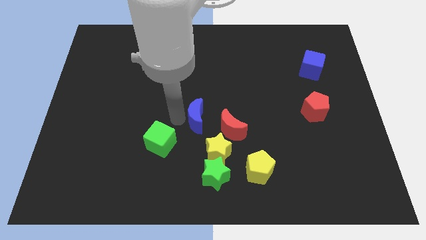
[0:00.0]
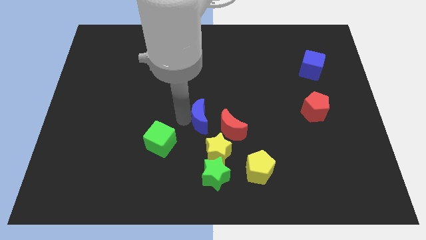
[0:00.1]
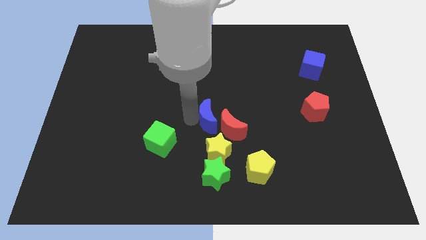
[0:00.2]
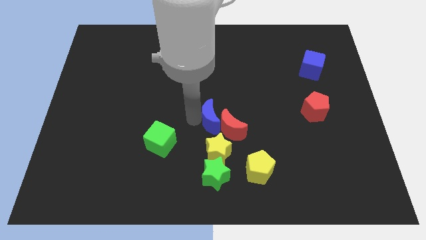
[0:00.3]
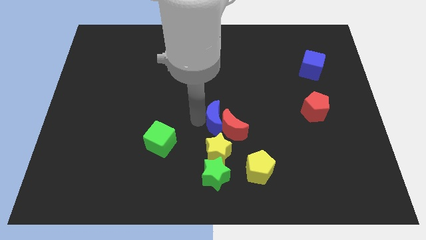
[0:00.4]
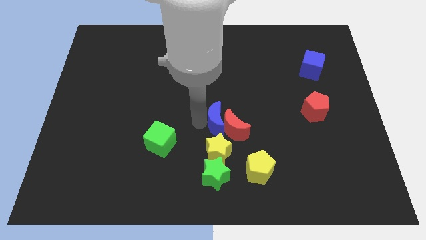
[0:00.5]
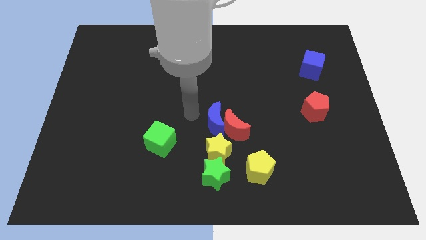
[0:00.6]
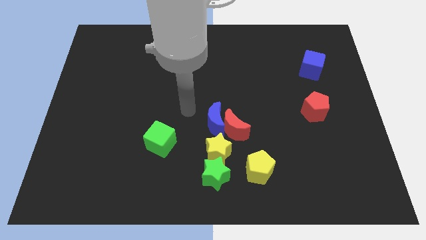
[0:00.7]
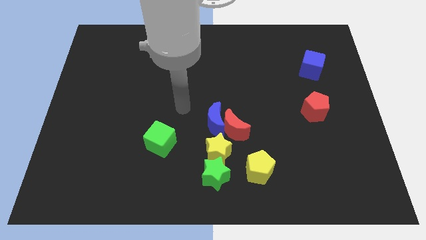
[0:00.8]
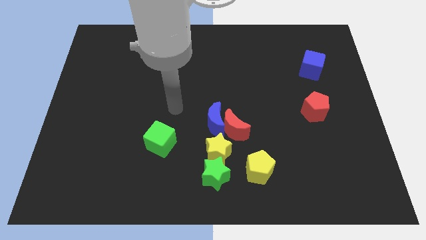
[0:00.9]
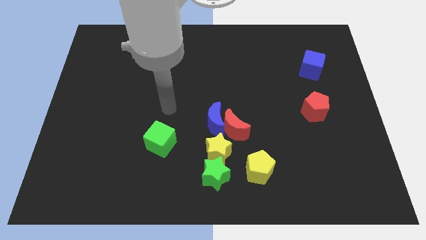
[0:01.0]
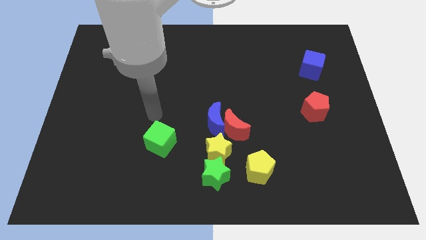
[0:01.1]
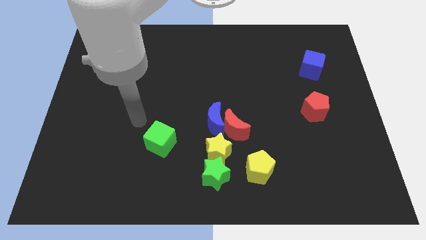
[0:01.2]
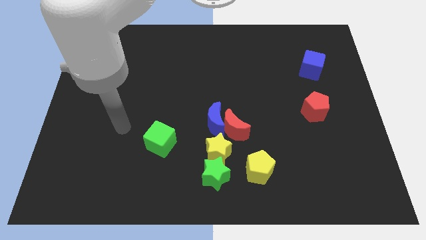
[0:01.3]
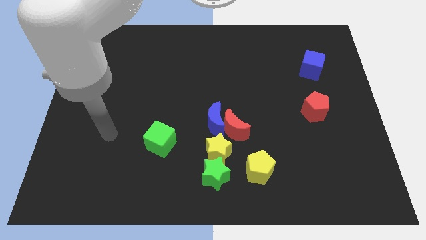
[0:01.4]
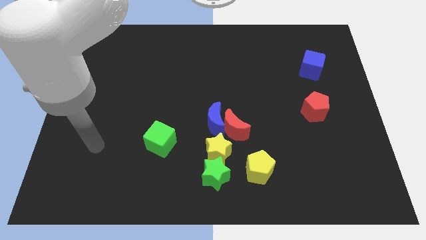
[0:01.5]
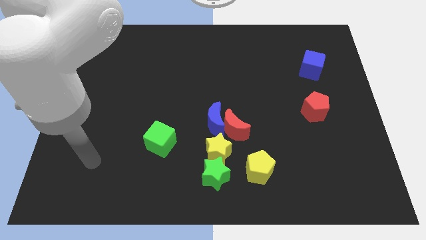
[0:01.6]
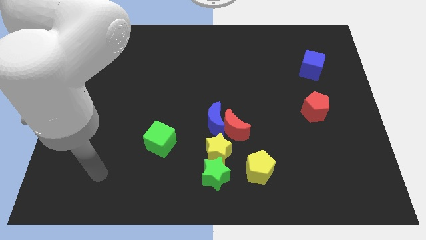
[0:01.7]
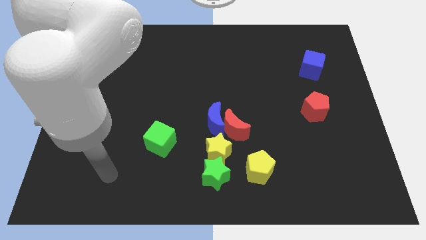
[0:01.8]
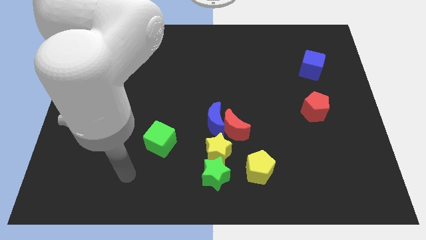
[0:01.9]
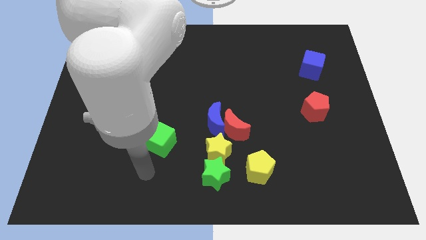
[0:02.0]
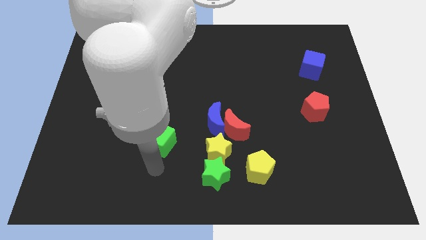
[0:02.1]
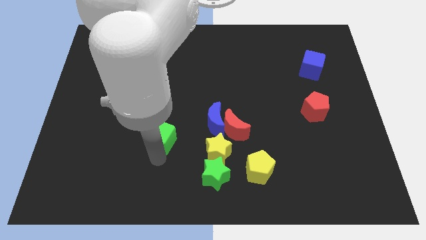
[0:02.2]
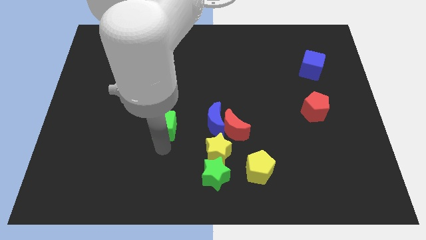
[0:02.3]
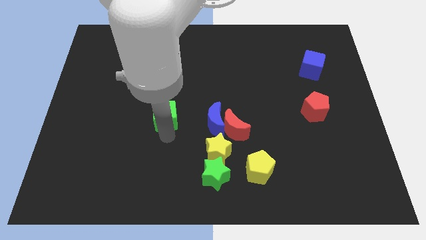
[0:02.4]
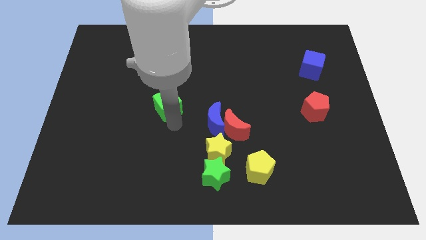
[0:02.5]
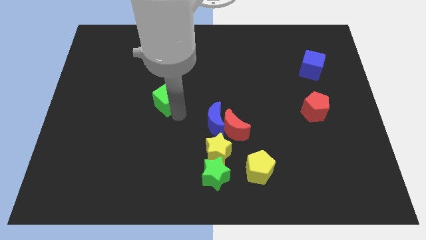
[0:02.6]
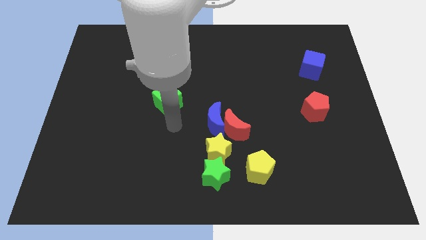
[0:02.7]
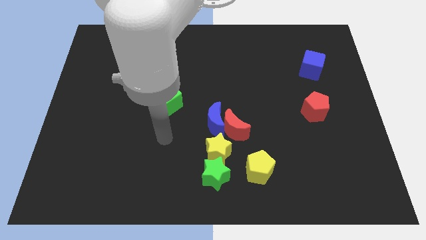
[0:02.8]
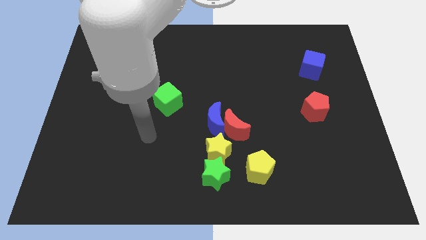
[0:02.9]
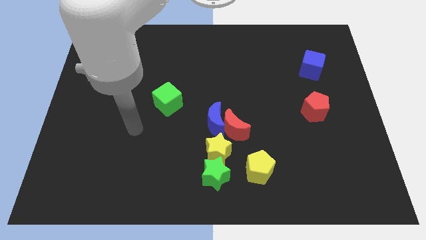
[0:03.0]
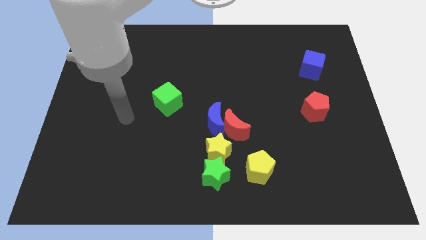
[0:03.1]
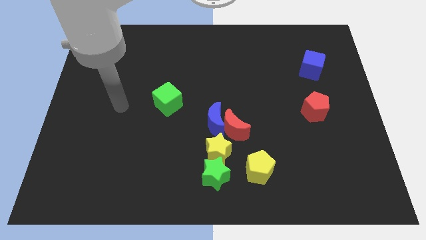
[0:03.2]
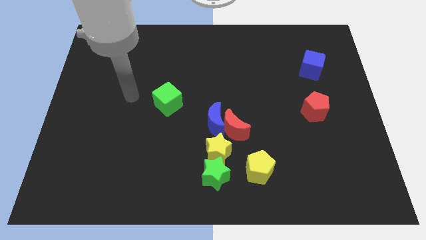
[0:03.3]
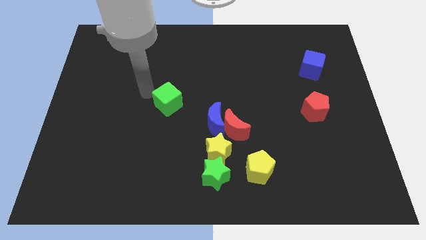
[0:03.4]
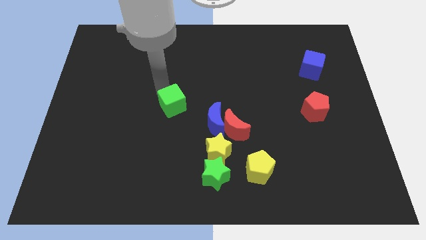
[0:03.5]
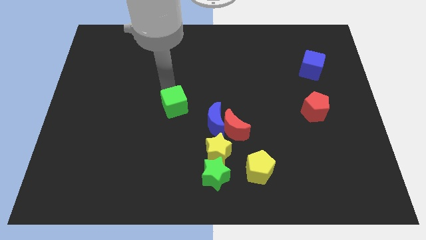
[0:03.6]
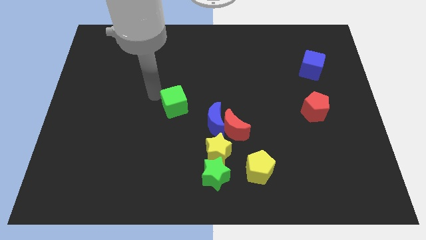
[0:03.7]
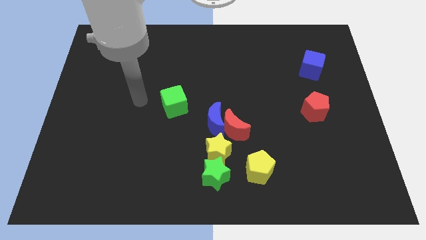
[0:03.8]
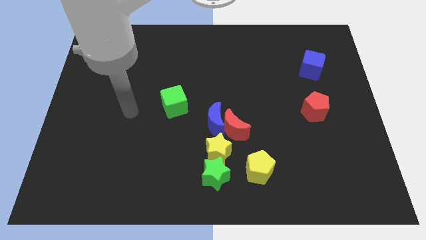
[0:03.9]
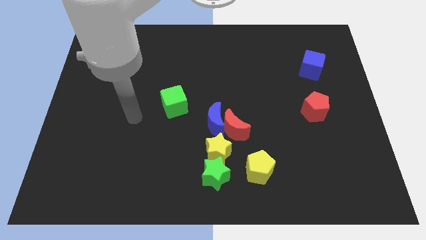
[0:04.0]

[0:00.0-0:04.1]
move the green block towards the center of the board

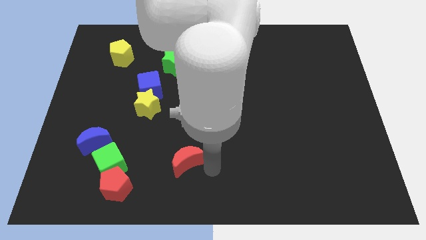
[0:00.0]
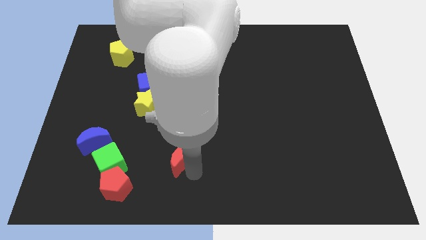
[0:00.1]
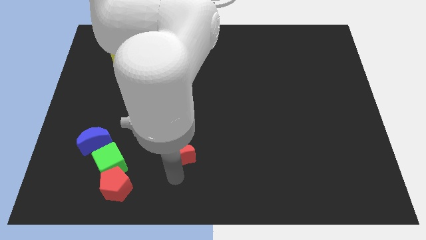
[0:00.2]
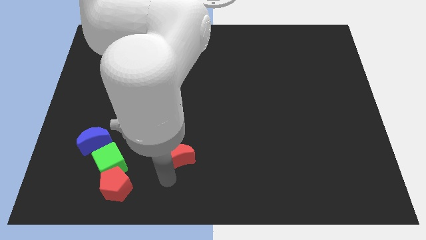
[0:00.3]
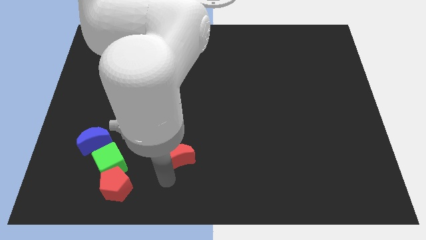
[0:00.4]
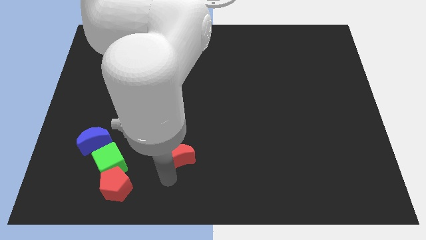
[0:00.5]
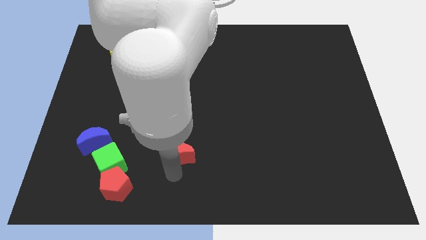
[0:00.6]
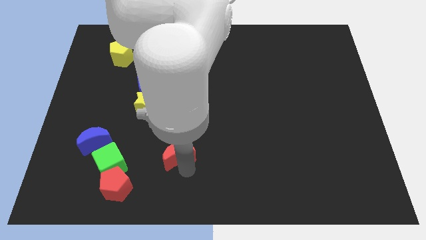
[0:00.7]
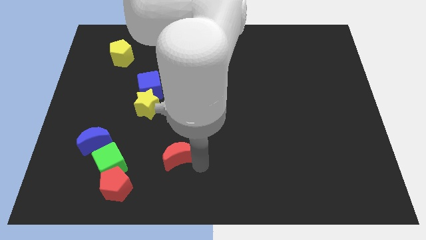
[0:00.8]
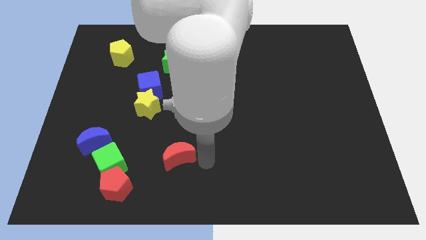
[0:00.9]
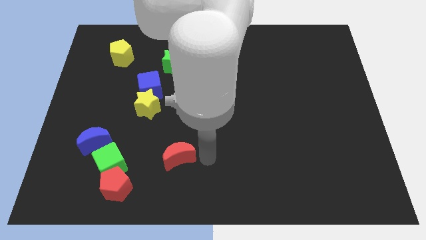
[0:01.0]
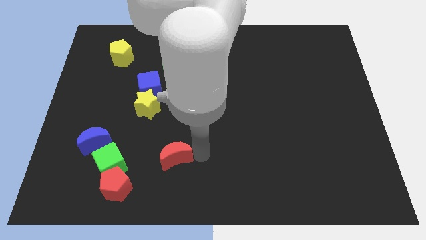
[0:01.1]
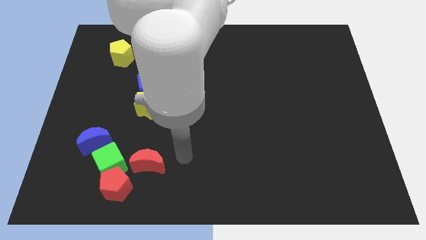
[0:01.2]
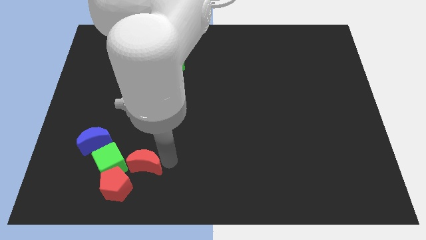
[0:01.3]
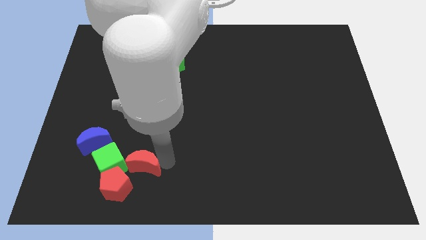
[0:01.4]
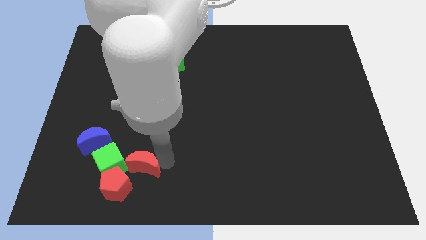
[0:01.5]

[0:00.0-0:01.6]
move red moon into the green cube

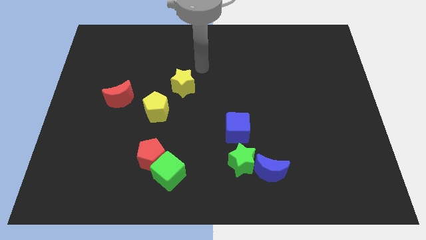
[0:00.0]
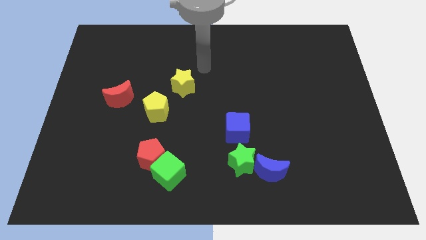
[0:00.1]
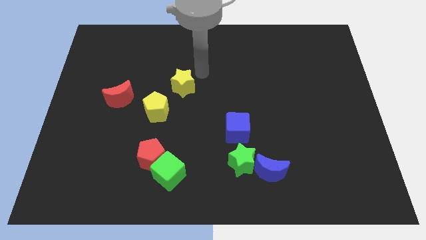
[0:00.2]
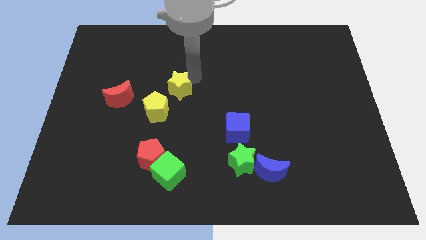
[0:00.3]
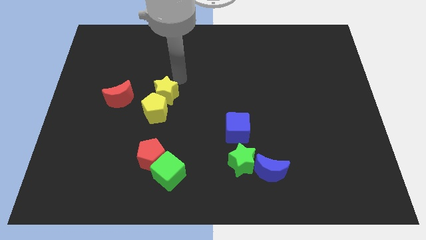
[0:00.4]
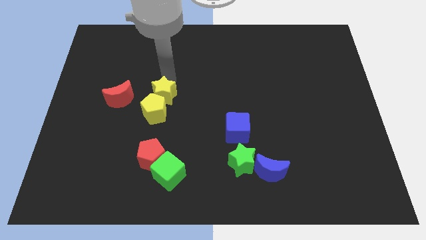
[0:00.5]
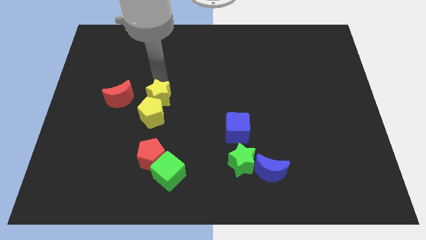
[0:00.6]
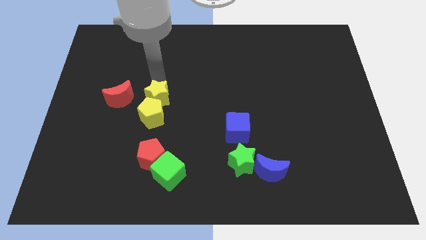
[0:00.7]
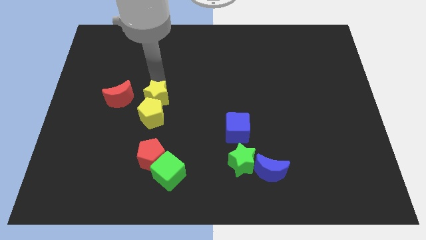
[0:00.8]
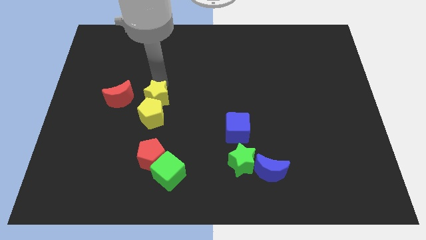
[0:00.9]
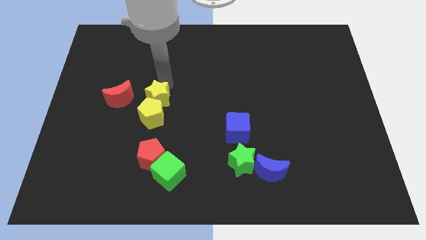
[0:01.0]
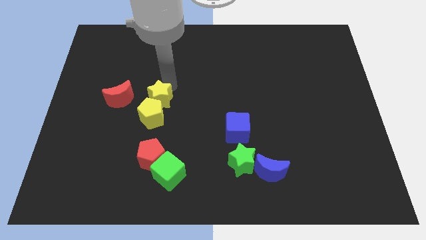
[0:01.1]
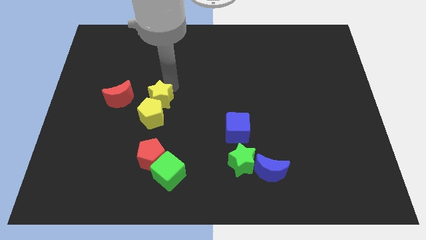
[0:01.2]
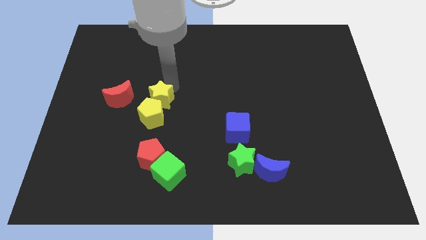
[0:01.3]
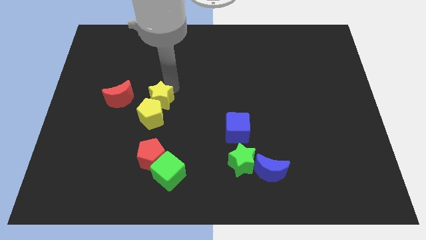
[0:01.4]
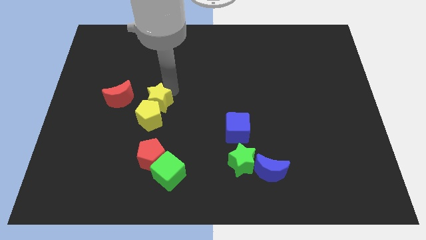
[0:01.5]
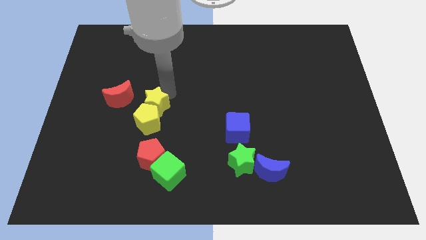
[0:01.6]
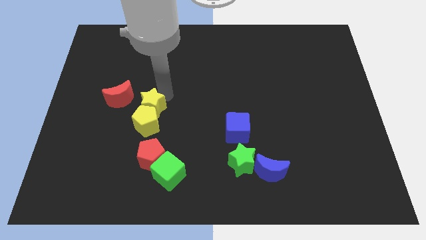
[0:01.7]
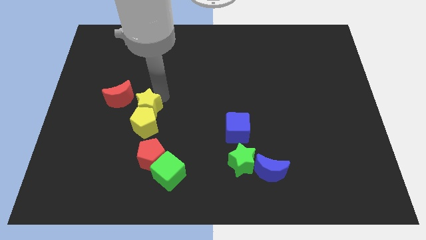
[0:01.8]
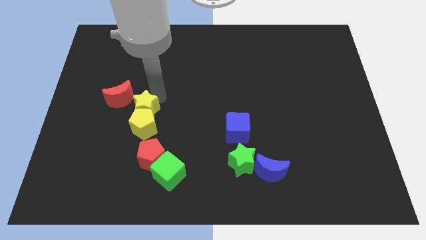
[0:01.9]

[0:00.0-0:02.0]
move yellow star into yellow yellow pentagon

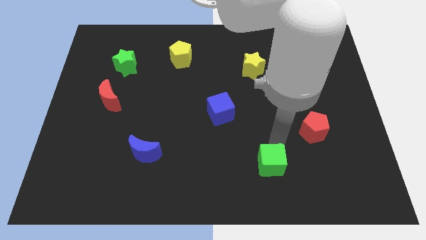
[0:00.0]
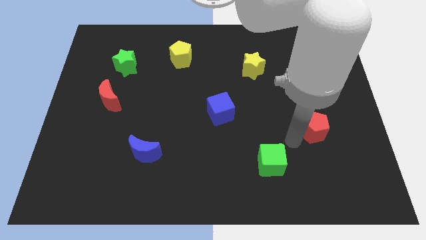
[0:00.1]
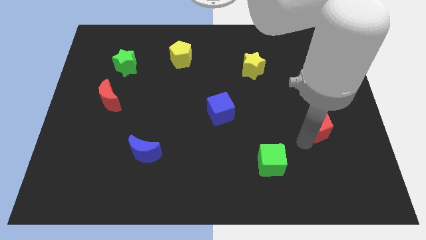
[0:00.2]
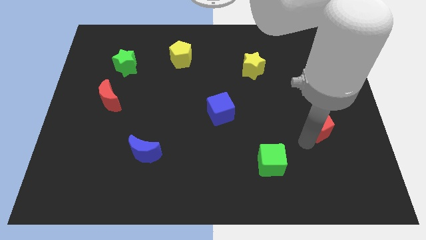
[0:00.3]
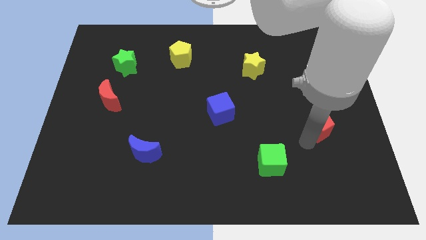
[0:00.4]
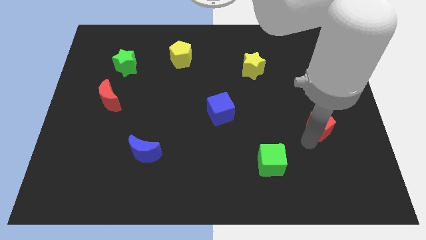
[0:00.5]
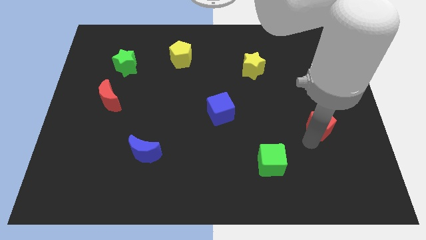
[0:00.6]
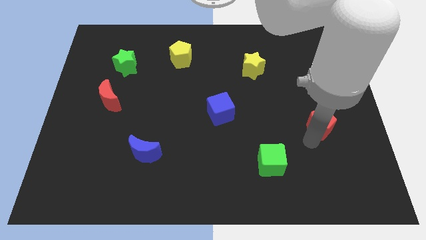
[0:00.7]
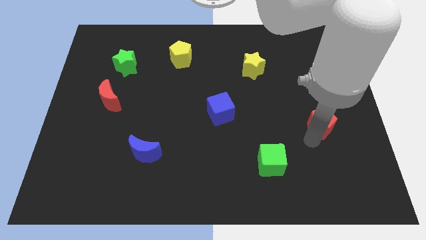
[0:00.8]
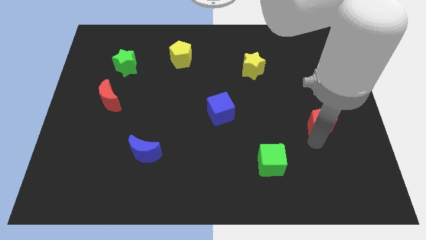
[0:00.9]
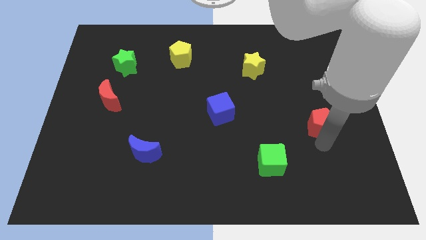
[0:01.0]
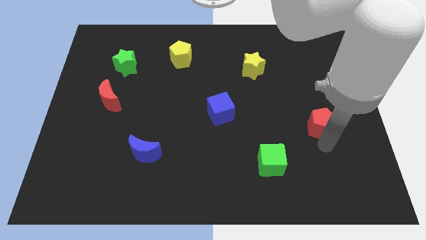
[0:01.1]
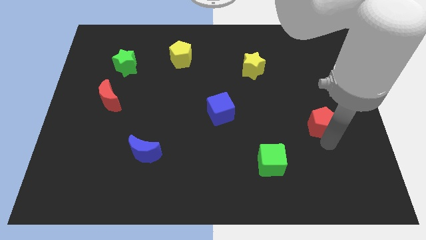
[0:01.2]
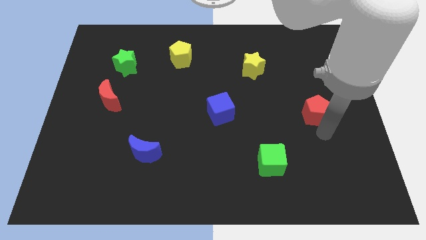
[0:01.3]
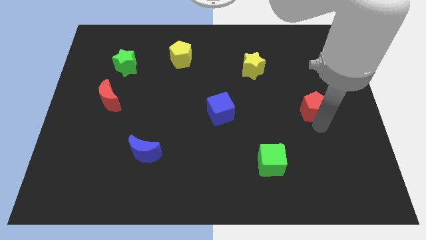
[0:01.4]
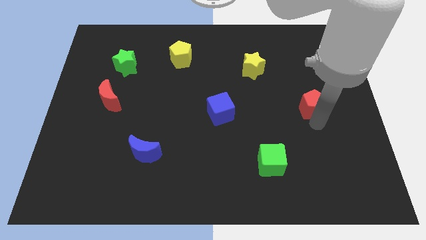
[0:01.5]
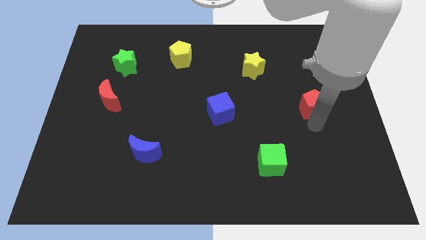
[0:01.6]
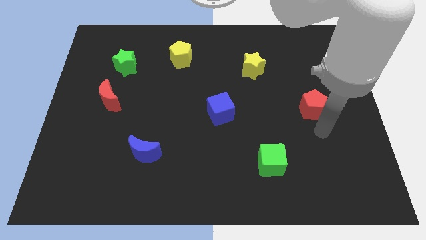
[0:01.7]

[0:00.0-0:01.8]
slightly move the red pentagon upwards
